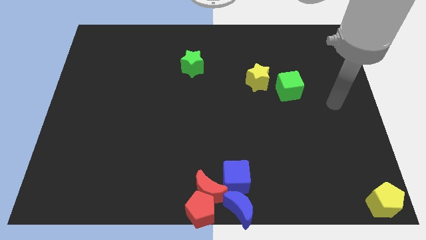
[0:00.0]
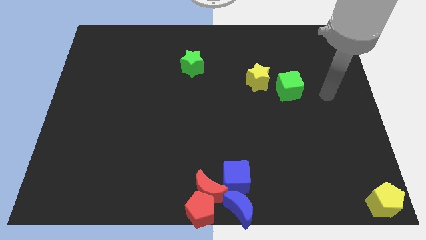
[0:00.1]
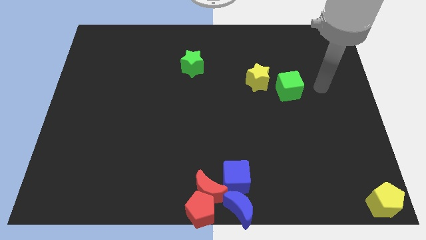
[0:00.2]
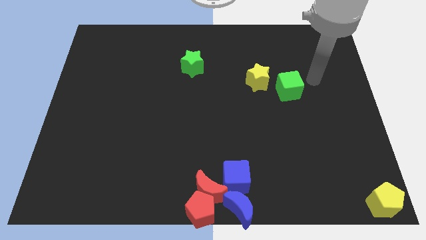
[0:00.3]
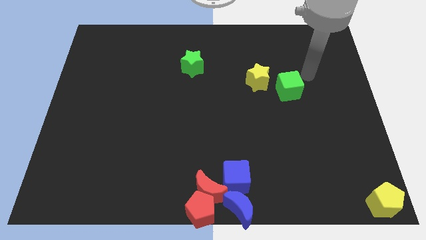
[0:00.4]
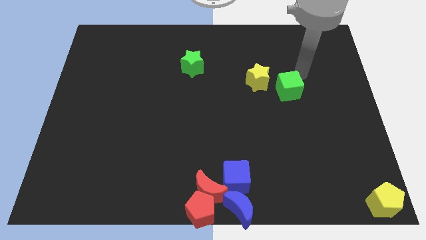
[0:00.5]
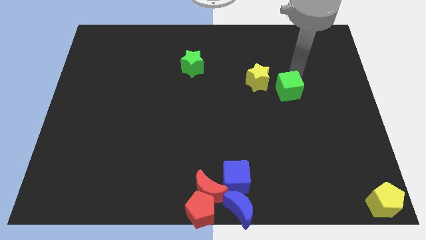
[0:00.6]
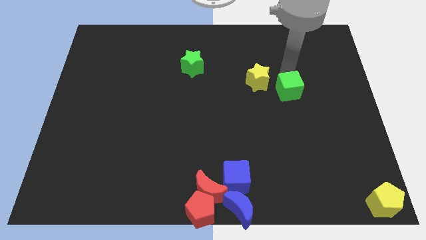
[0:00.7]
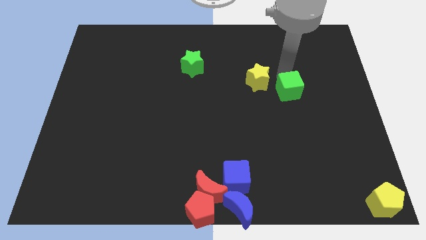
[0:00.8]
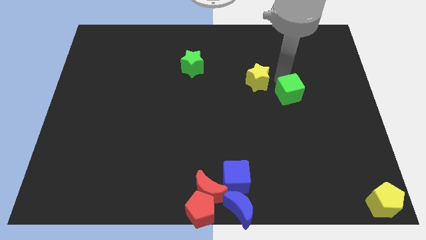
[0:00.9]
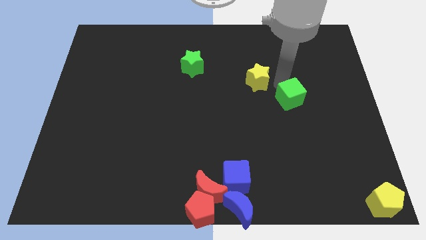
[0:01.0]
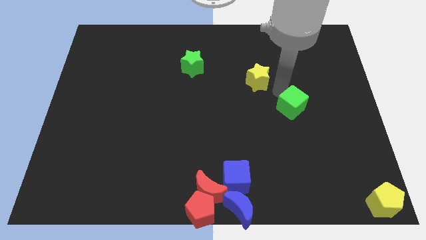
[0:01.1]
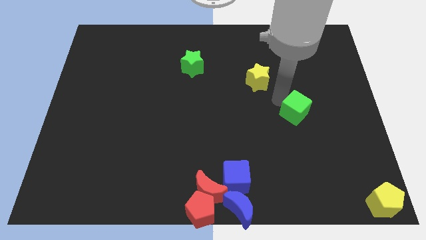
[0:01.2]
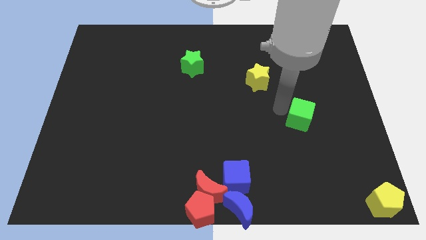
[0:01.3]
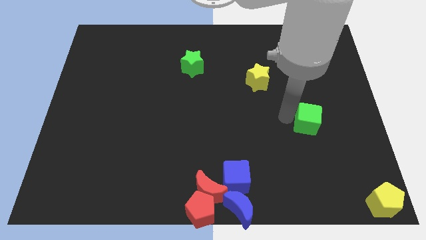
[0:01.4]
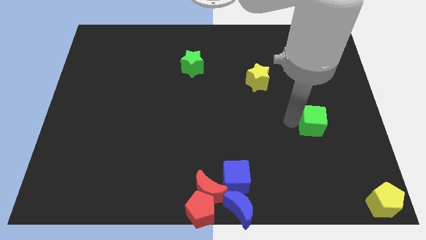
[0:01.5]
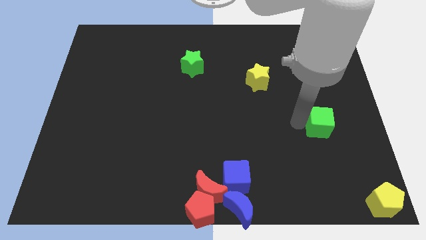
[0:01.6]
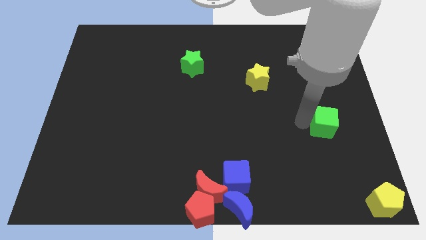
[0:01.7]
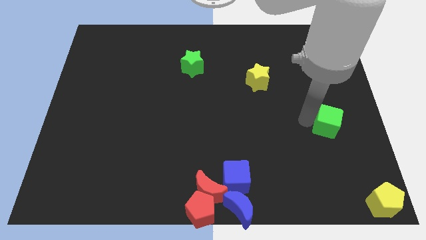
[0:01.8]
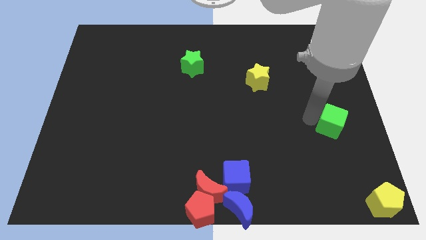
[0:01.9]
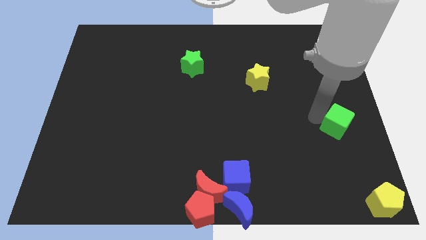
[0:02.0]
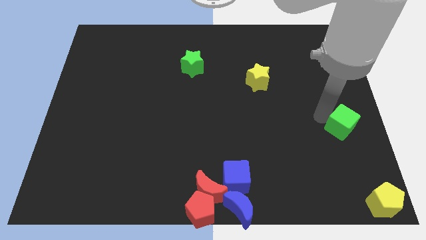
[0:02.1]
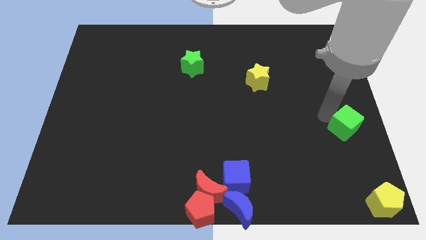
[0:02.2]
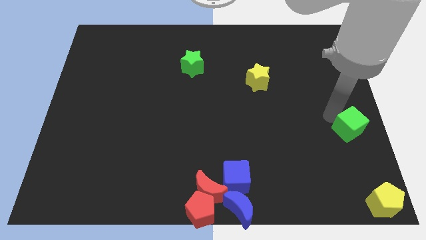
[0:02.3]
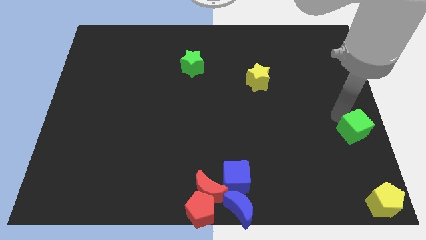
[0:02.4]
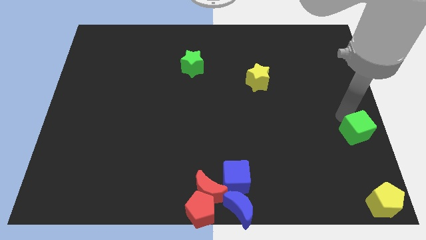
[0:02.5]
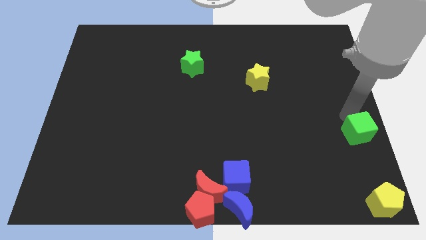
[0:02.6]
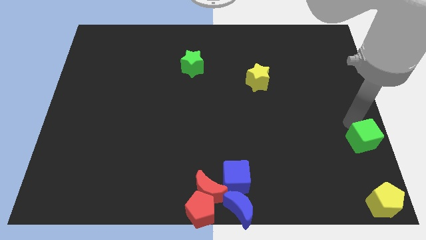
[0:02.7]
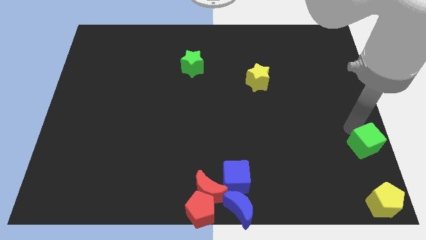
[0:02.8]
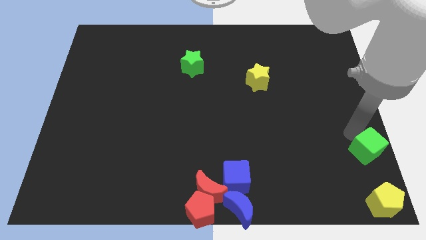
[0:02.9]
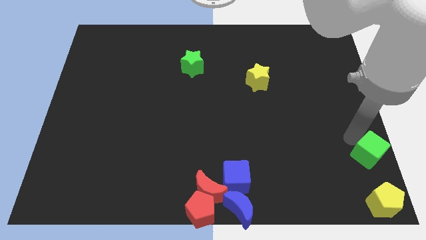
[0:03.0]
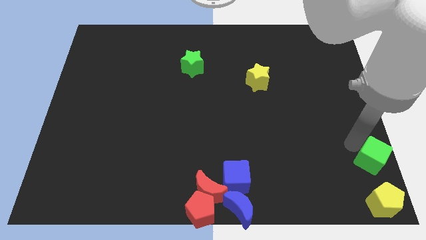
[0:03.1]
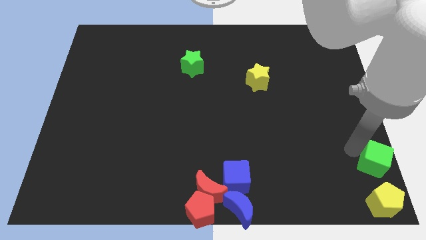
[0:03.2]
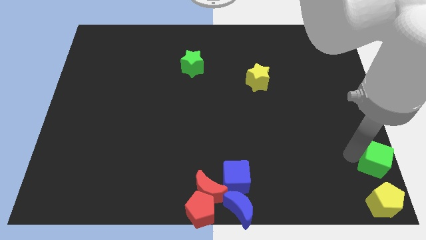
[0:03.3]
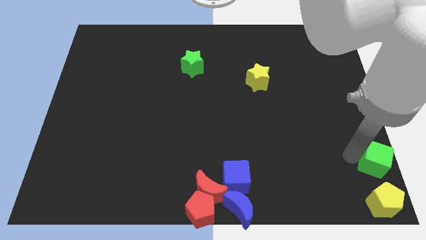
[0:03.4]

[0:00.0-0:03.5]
put the green cube above the yellow pentagon

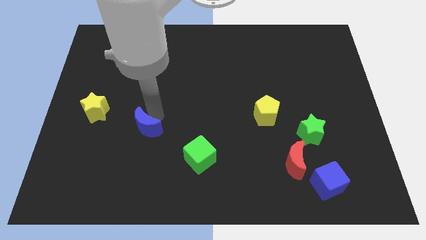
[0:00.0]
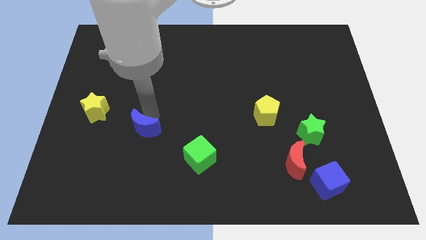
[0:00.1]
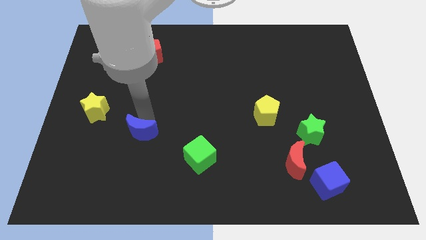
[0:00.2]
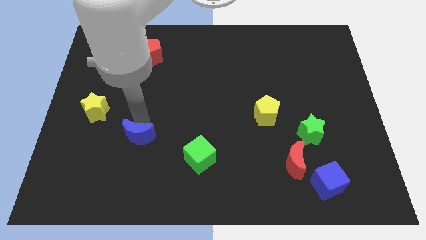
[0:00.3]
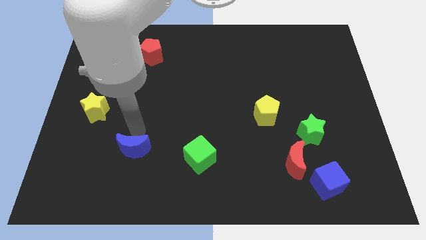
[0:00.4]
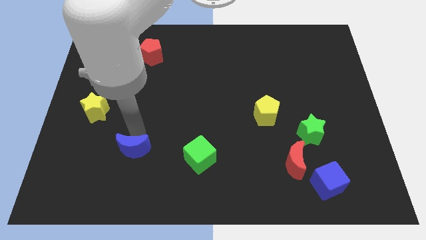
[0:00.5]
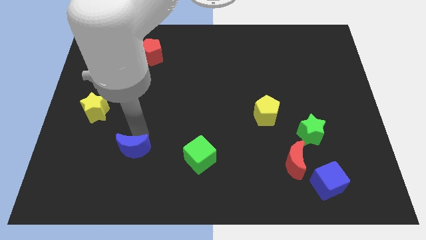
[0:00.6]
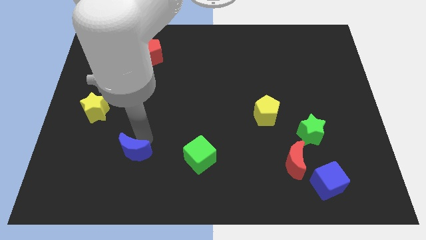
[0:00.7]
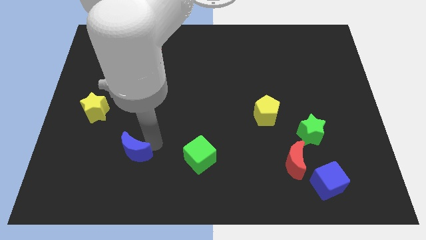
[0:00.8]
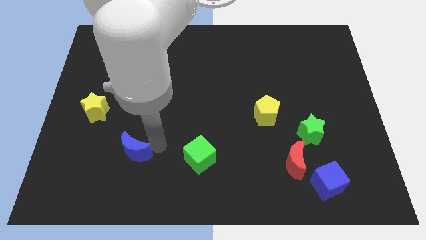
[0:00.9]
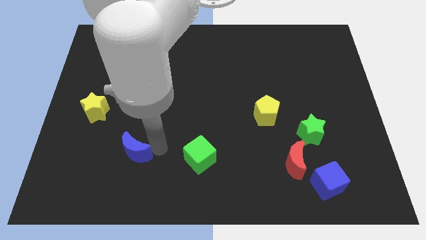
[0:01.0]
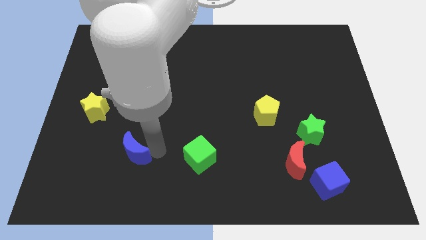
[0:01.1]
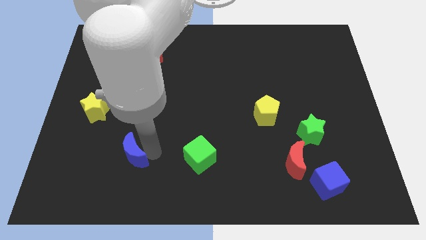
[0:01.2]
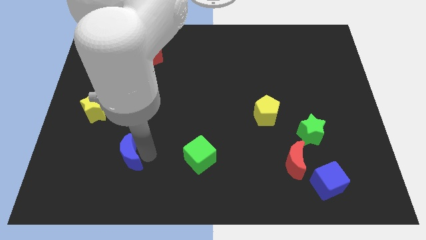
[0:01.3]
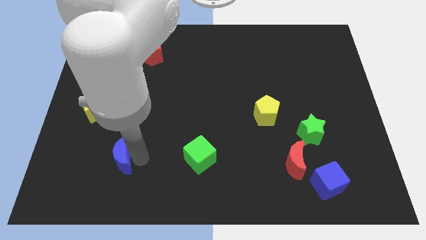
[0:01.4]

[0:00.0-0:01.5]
place the blue moon parallel to green cube

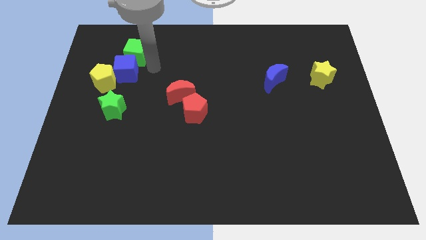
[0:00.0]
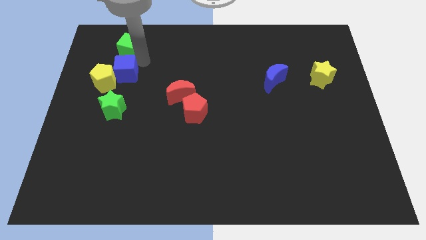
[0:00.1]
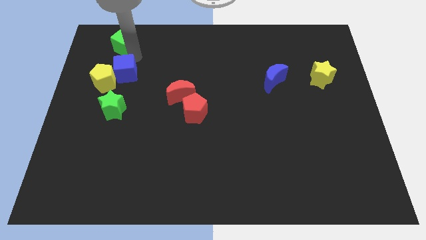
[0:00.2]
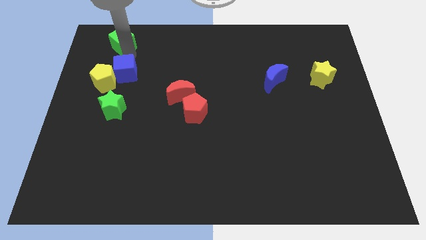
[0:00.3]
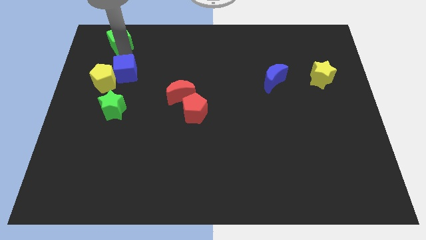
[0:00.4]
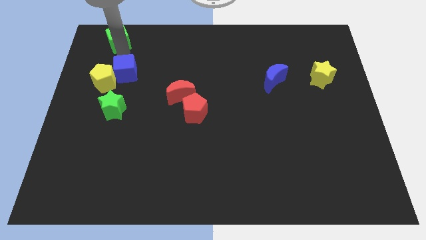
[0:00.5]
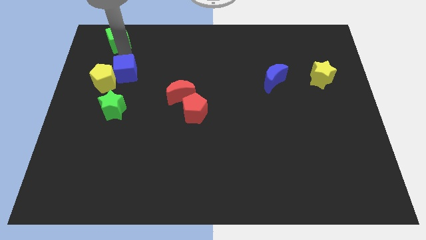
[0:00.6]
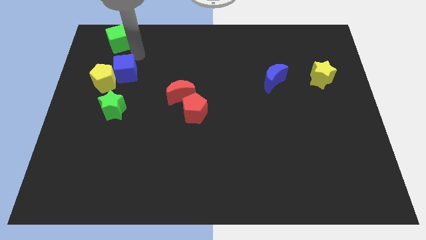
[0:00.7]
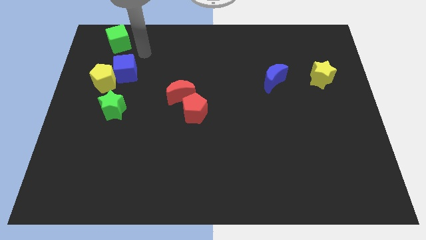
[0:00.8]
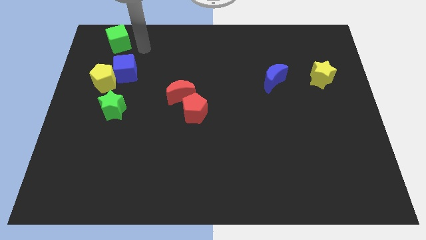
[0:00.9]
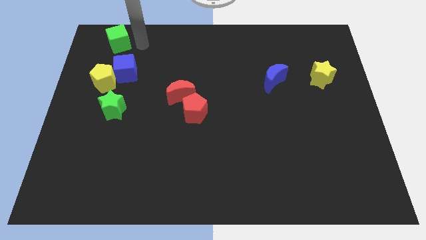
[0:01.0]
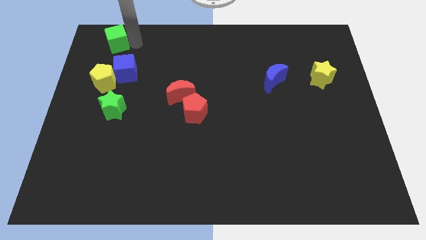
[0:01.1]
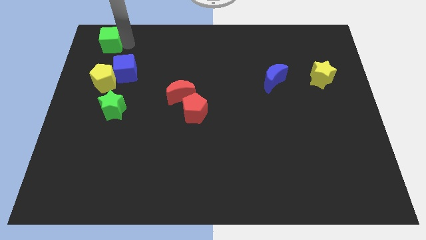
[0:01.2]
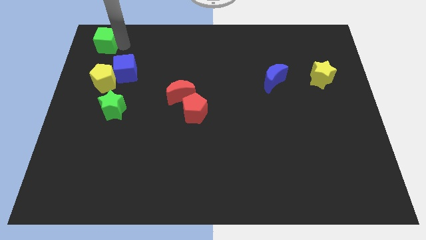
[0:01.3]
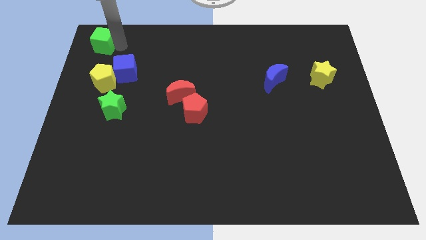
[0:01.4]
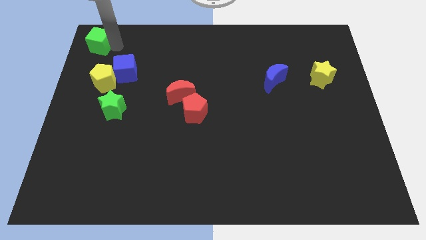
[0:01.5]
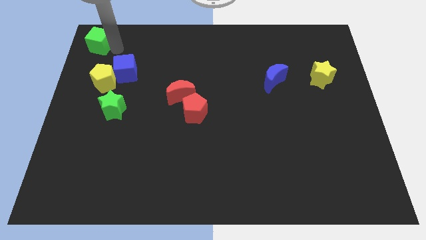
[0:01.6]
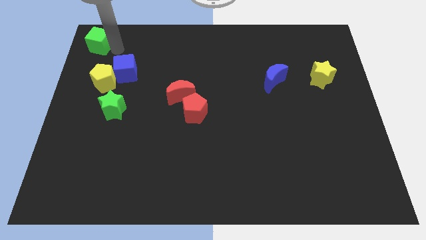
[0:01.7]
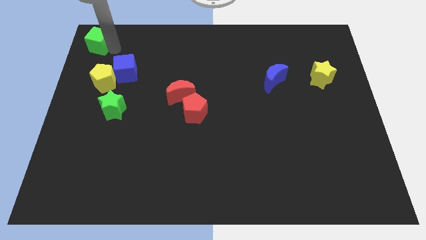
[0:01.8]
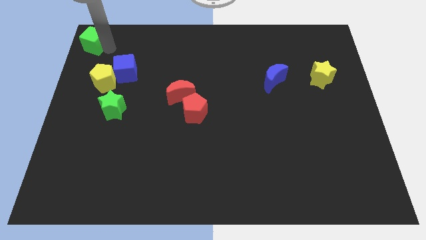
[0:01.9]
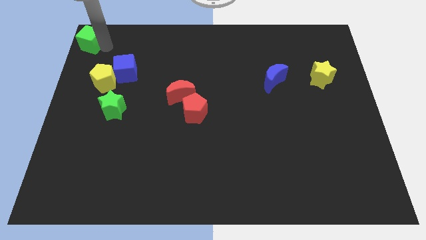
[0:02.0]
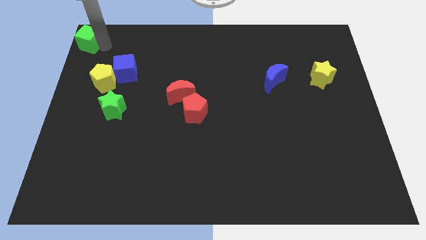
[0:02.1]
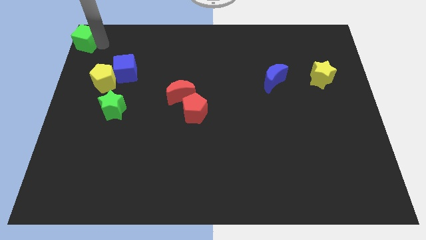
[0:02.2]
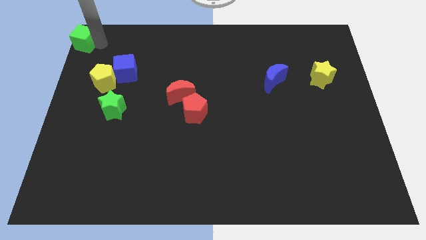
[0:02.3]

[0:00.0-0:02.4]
put the green cube at the top left corner of the board

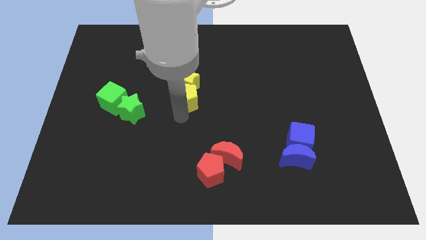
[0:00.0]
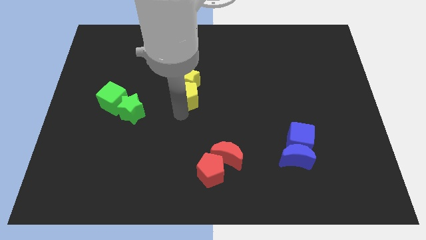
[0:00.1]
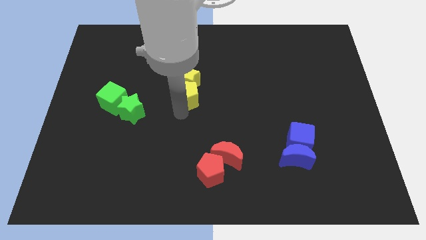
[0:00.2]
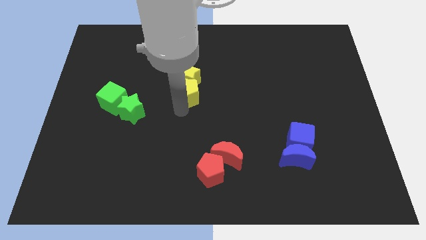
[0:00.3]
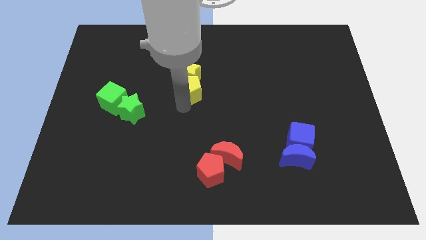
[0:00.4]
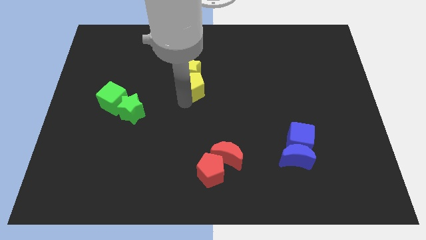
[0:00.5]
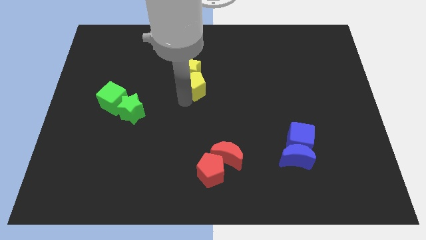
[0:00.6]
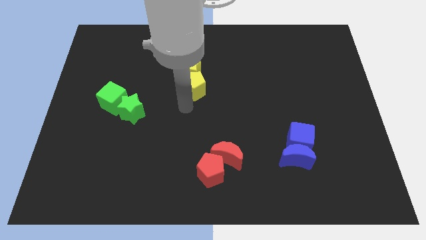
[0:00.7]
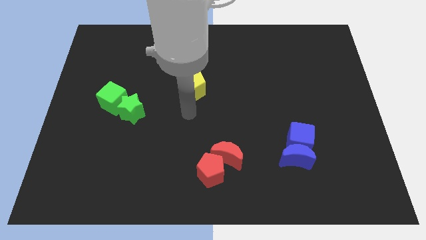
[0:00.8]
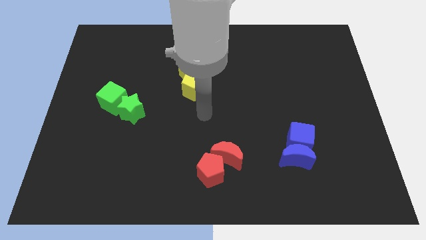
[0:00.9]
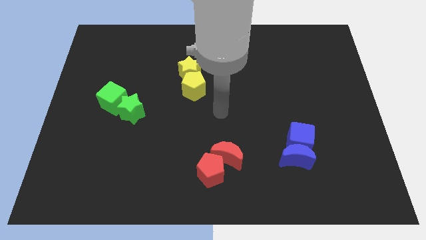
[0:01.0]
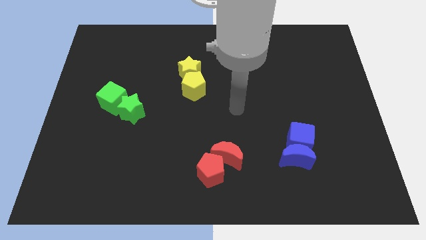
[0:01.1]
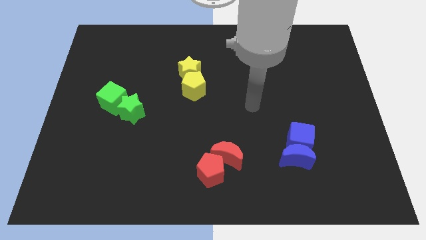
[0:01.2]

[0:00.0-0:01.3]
slightly push the yellow pentagon with yellow star towards the top center

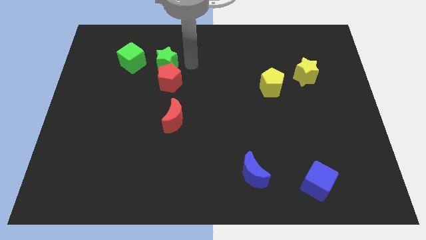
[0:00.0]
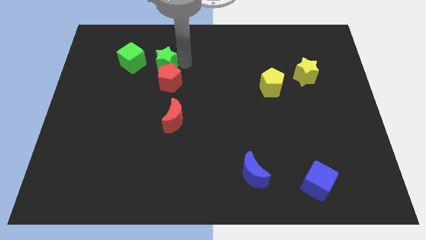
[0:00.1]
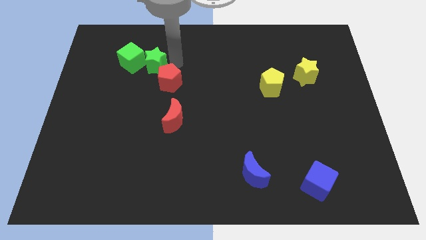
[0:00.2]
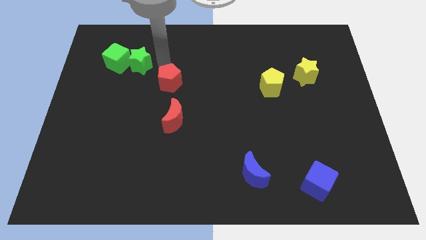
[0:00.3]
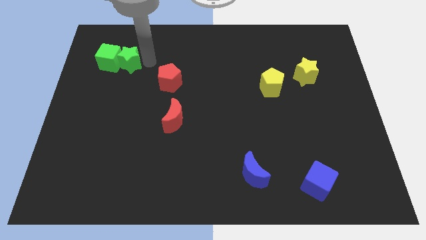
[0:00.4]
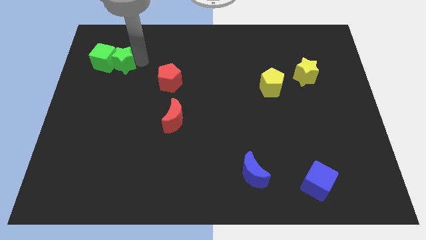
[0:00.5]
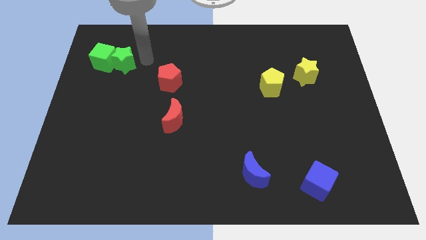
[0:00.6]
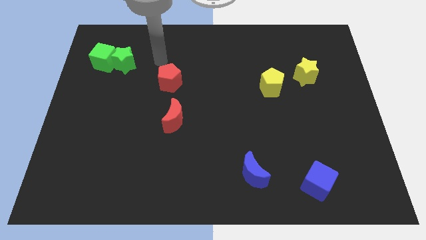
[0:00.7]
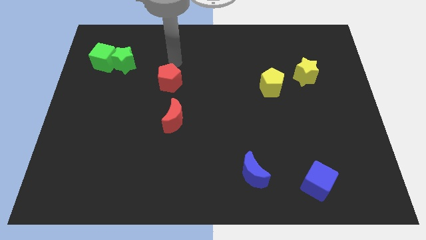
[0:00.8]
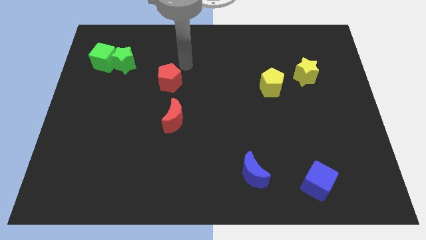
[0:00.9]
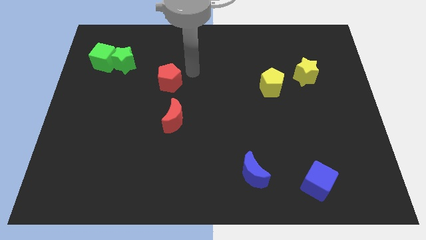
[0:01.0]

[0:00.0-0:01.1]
push the green star into the green cube
